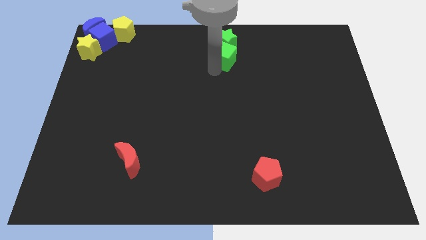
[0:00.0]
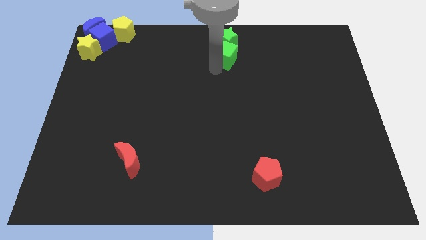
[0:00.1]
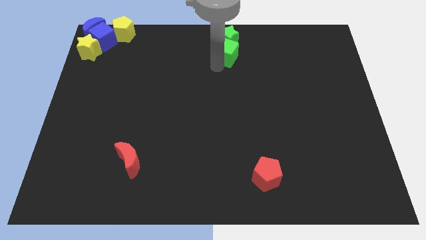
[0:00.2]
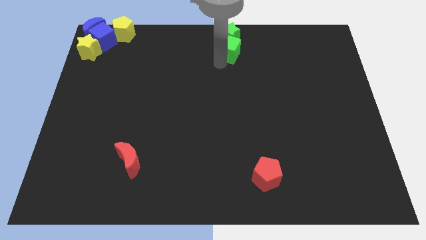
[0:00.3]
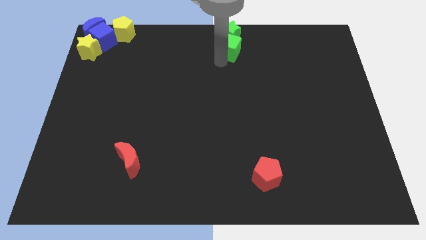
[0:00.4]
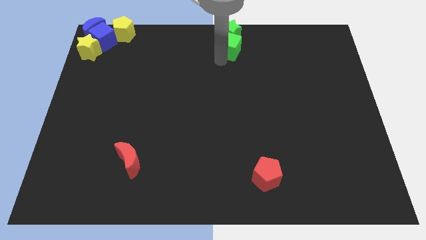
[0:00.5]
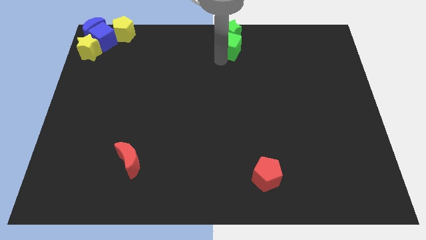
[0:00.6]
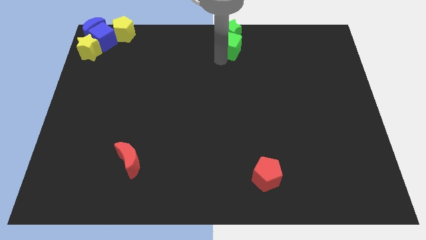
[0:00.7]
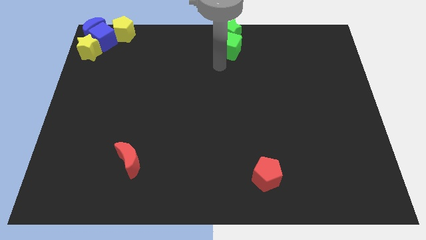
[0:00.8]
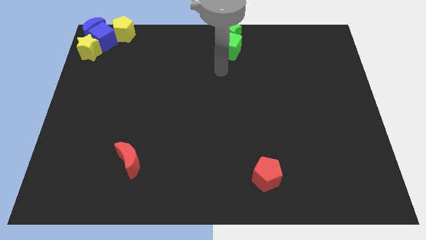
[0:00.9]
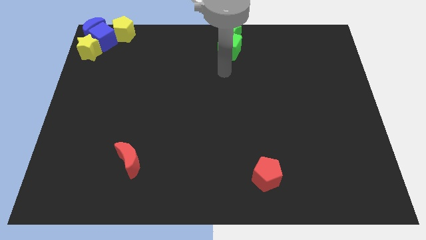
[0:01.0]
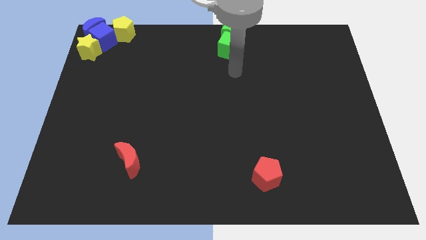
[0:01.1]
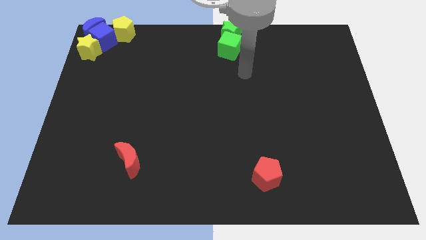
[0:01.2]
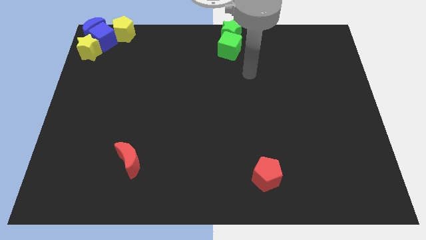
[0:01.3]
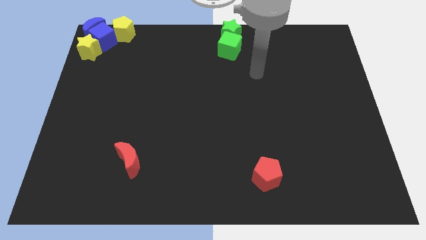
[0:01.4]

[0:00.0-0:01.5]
push the green blocks to the top center

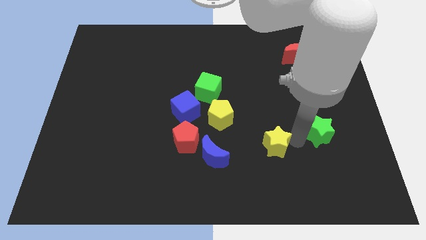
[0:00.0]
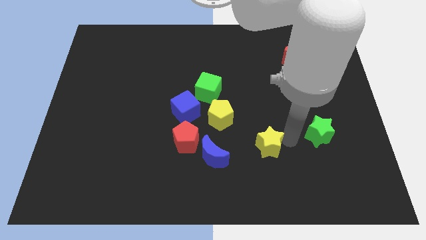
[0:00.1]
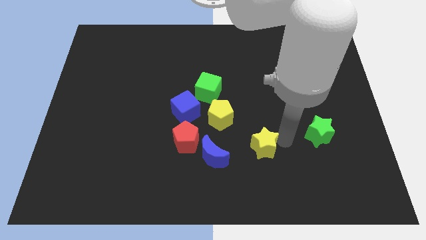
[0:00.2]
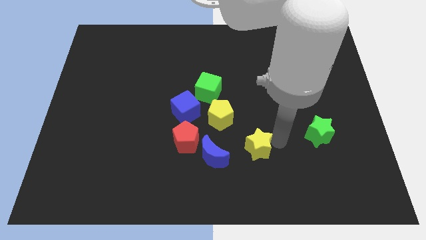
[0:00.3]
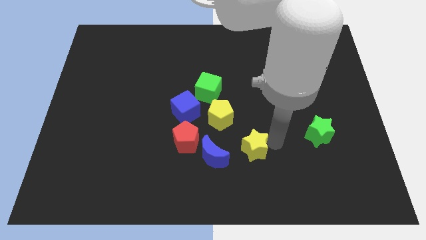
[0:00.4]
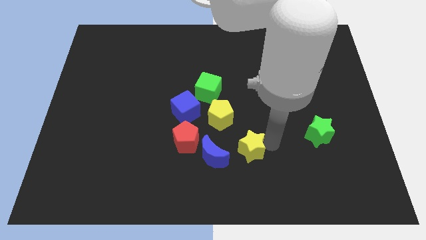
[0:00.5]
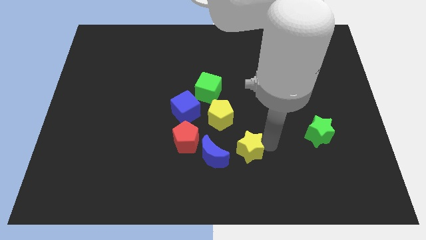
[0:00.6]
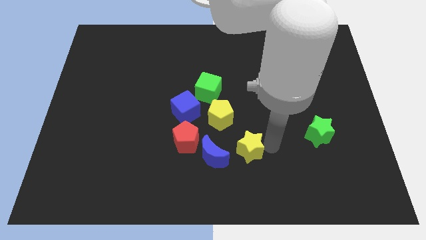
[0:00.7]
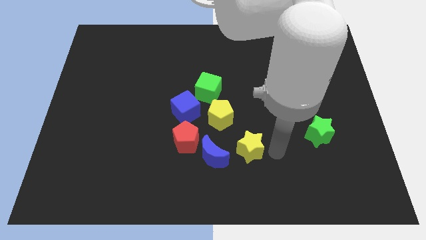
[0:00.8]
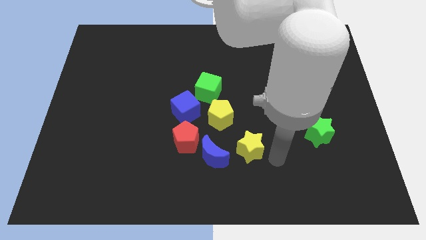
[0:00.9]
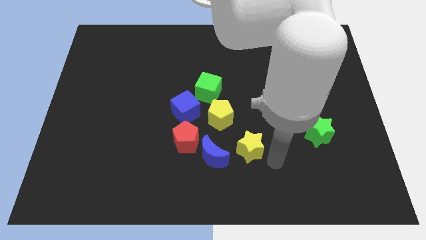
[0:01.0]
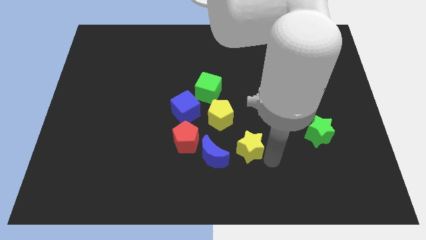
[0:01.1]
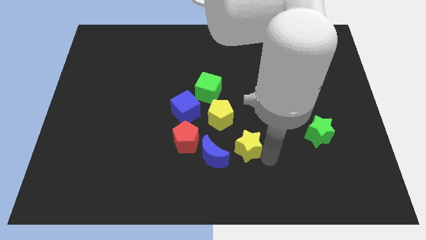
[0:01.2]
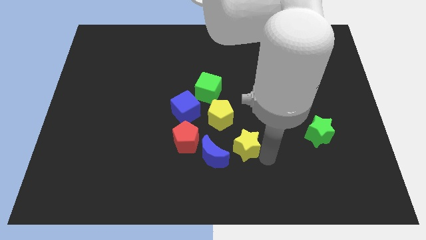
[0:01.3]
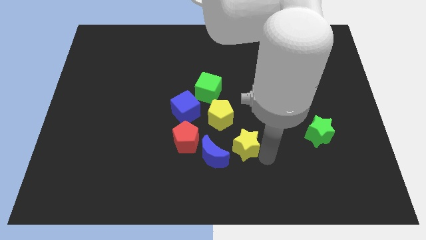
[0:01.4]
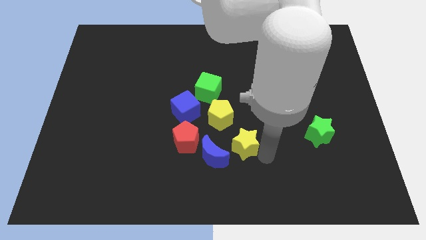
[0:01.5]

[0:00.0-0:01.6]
move the yellow star close to the blue moon

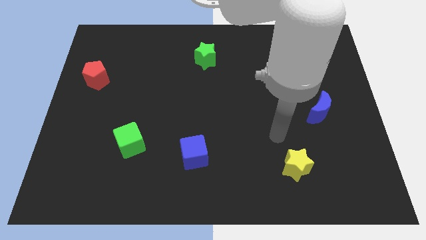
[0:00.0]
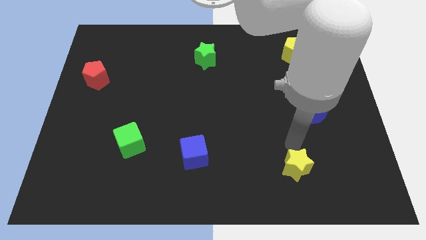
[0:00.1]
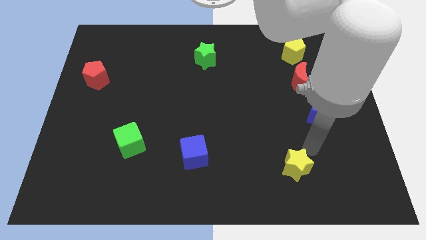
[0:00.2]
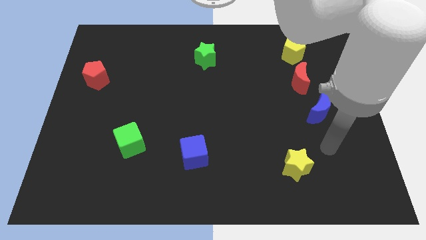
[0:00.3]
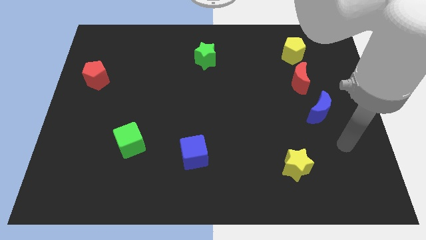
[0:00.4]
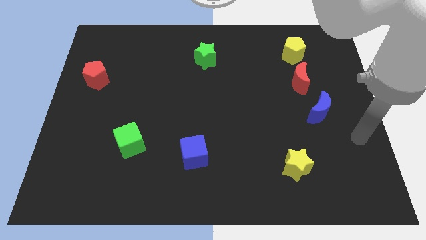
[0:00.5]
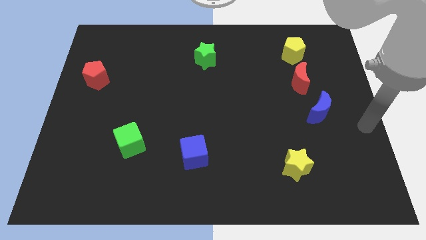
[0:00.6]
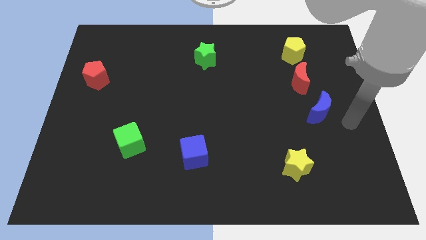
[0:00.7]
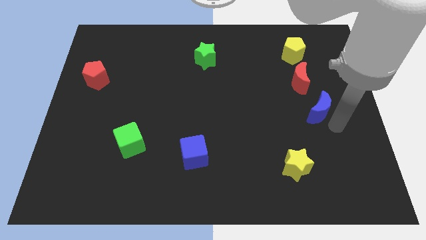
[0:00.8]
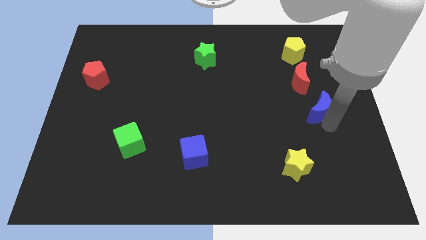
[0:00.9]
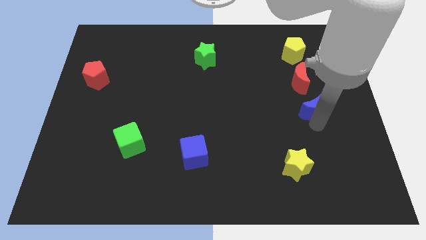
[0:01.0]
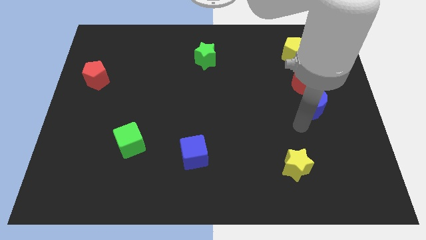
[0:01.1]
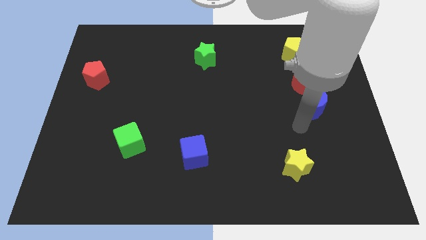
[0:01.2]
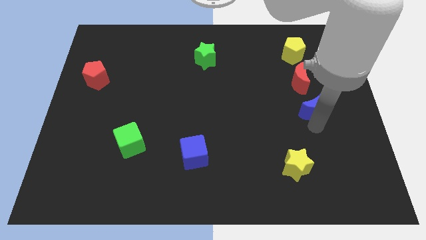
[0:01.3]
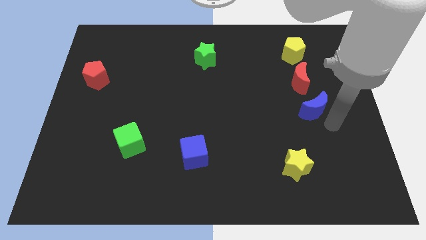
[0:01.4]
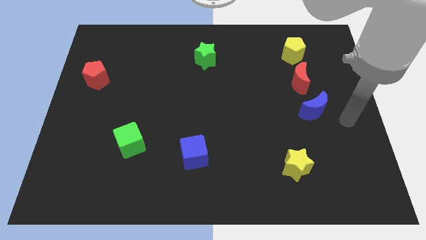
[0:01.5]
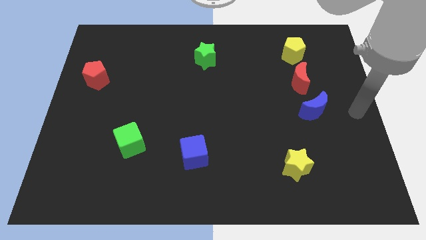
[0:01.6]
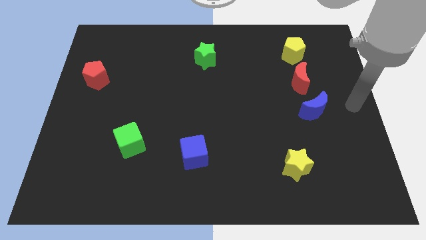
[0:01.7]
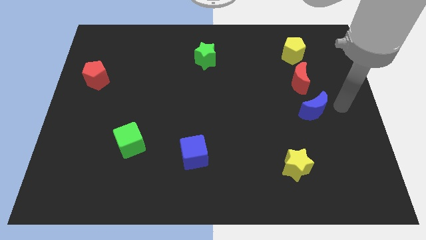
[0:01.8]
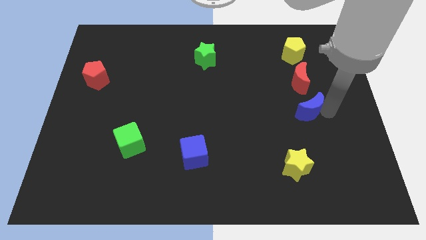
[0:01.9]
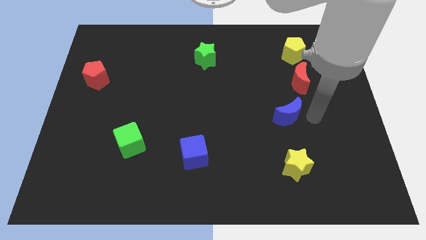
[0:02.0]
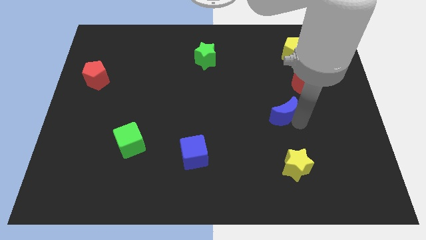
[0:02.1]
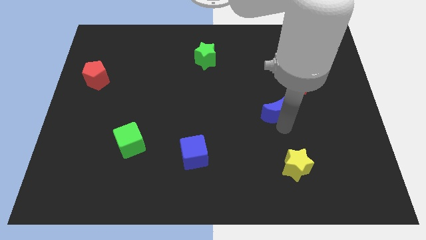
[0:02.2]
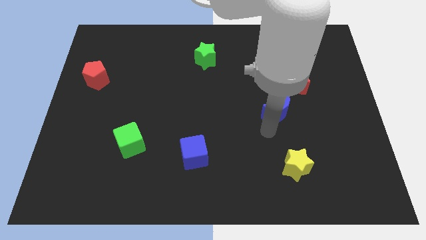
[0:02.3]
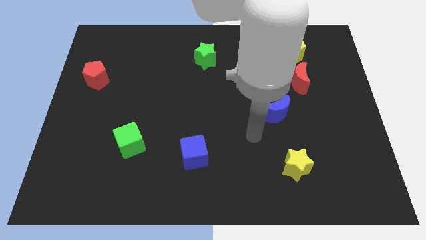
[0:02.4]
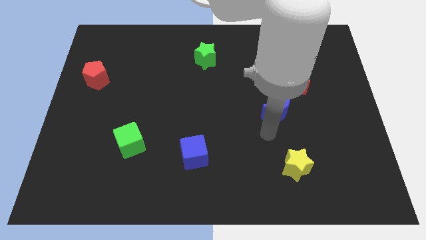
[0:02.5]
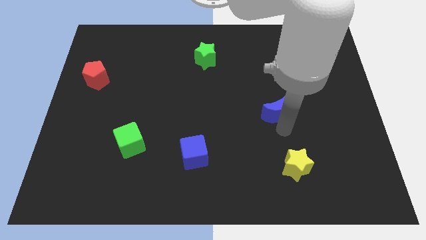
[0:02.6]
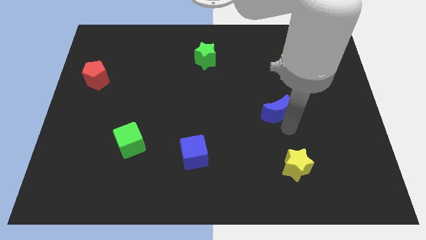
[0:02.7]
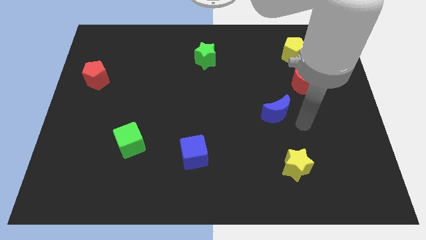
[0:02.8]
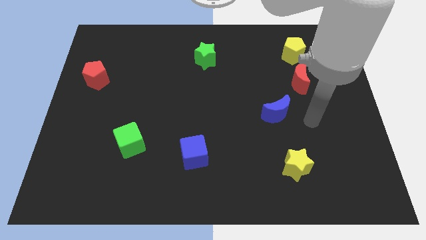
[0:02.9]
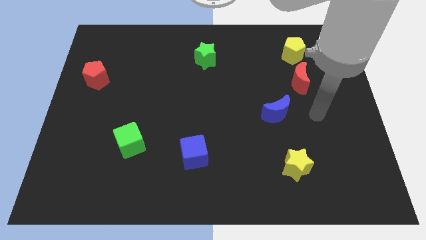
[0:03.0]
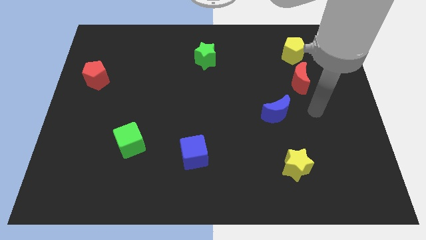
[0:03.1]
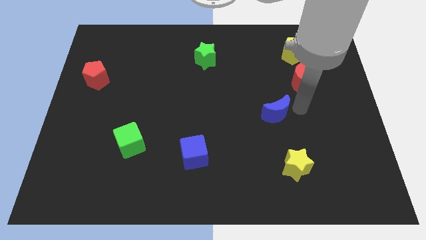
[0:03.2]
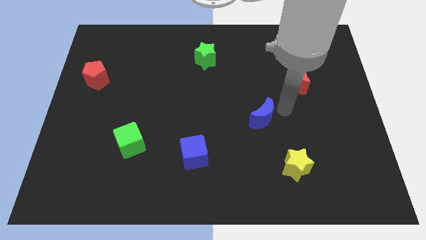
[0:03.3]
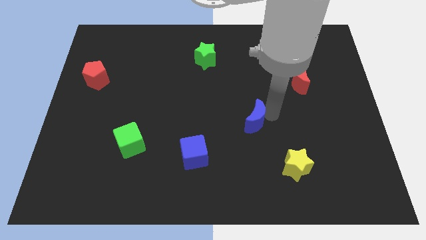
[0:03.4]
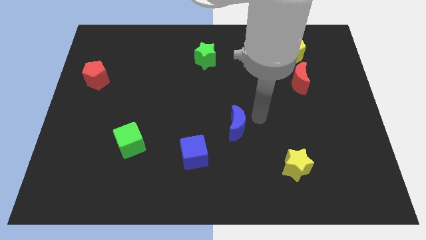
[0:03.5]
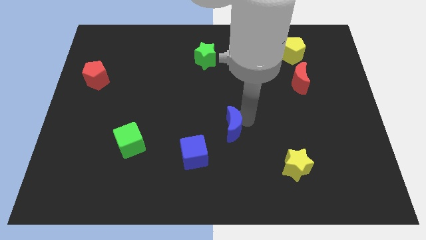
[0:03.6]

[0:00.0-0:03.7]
move the blue moon near the blue cube

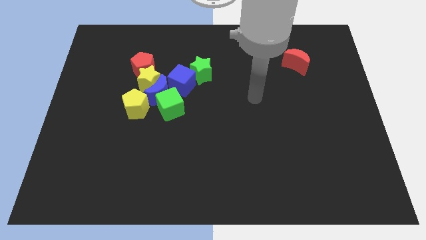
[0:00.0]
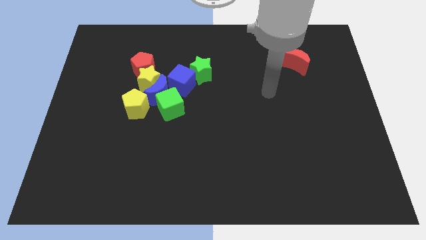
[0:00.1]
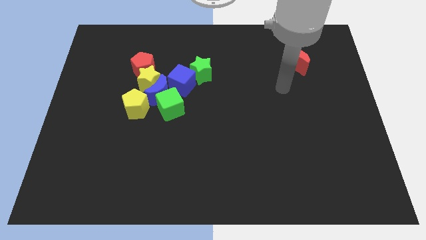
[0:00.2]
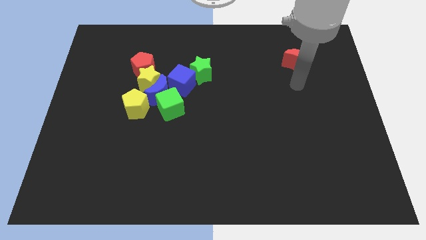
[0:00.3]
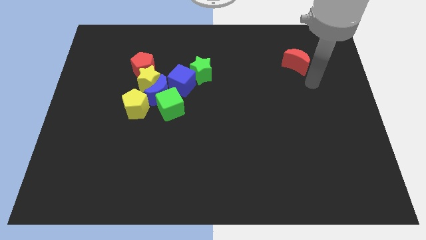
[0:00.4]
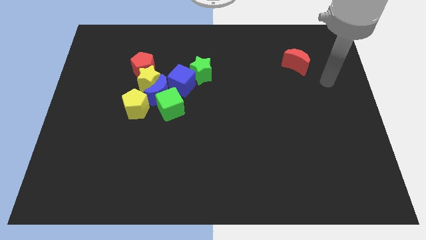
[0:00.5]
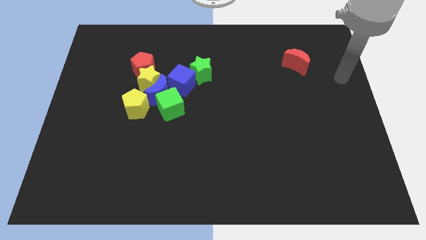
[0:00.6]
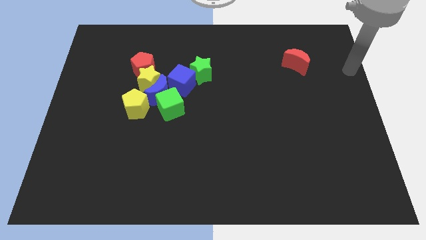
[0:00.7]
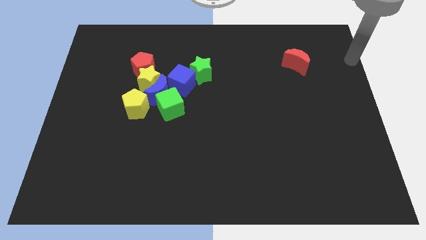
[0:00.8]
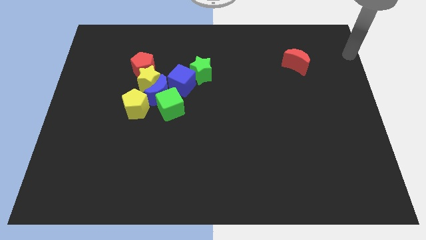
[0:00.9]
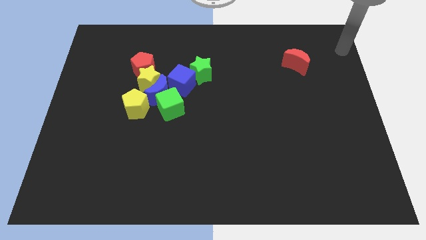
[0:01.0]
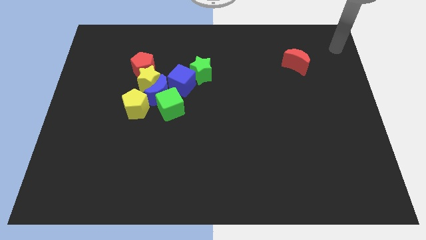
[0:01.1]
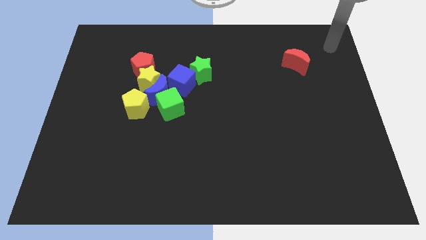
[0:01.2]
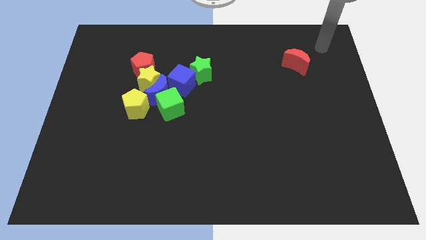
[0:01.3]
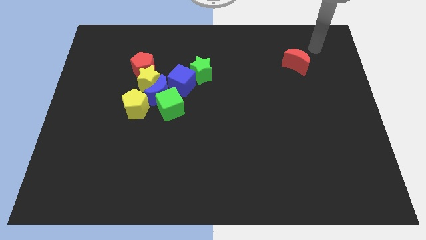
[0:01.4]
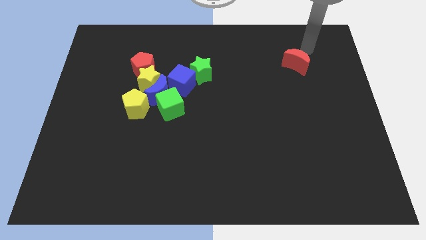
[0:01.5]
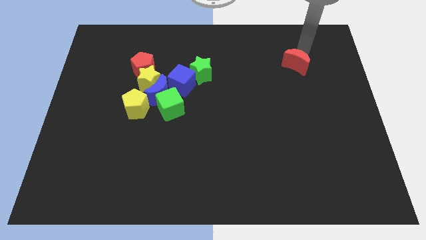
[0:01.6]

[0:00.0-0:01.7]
point your arm above the red crescent

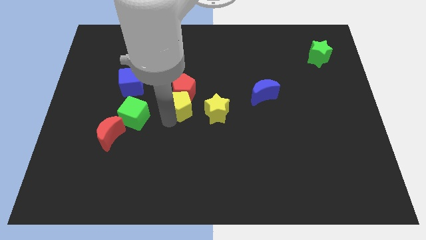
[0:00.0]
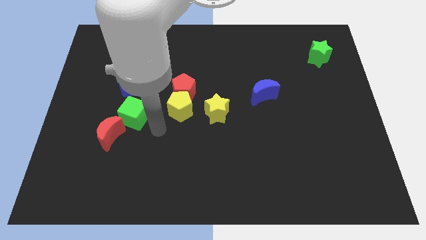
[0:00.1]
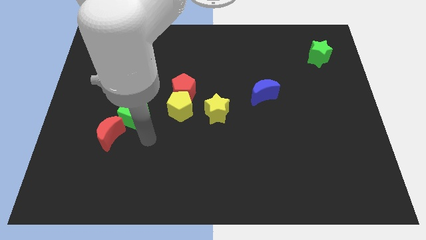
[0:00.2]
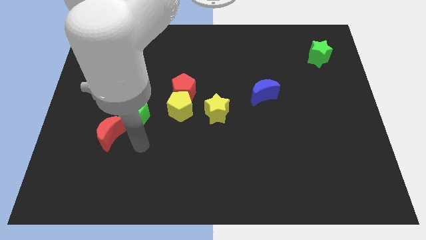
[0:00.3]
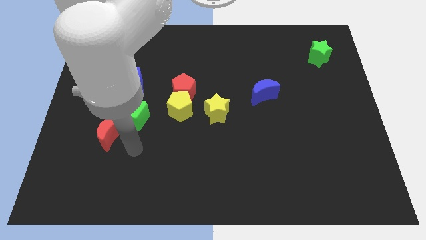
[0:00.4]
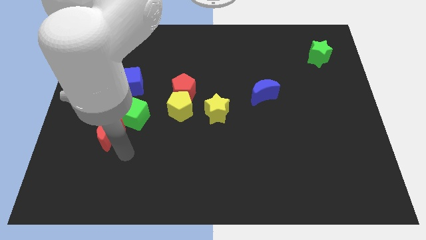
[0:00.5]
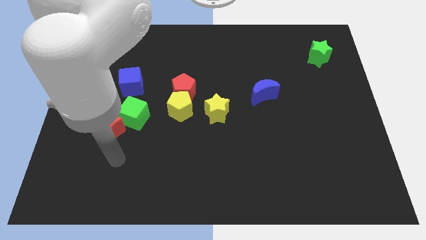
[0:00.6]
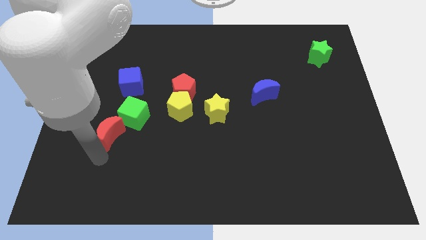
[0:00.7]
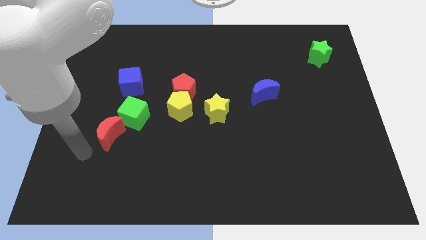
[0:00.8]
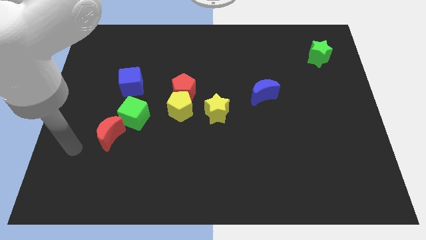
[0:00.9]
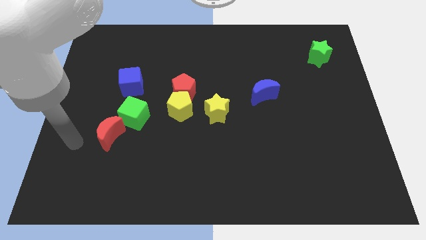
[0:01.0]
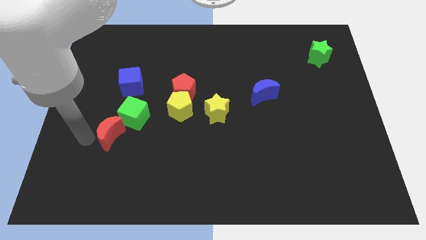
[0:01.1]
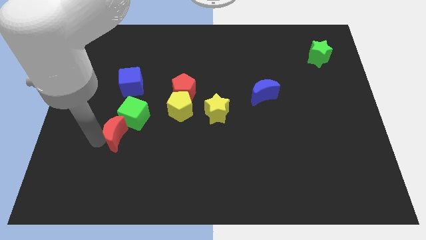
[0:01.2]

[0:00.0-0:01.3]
move the arm to the bottom left of the red moon
